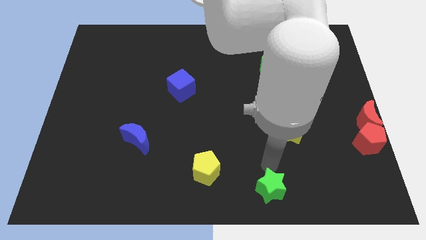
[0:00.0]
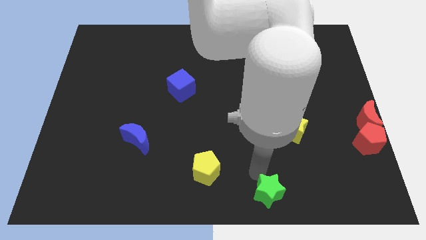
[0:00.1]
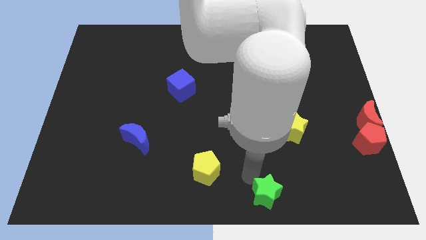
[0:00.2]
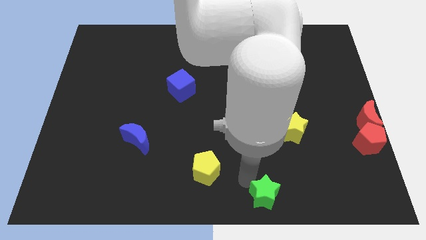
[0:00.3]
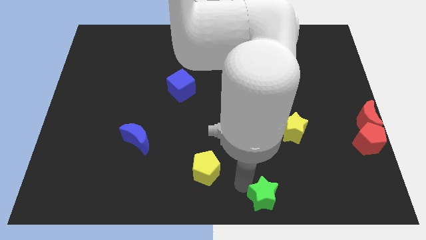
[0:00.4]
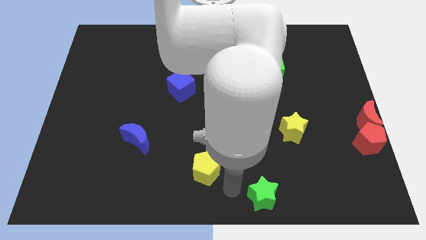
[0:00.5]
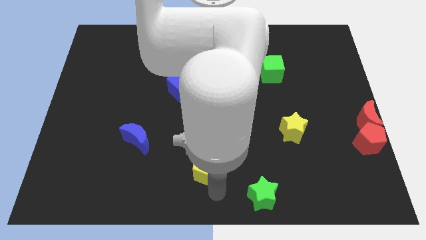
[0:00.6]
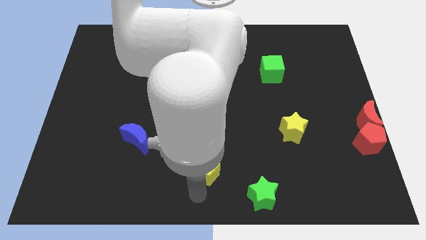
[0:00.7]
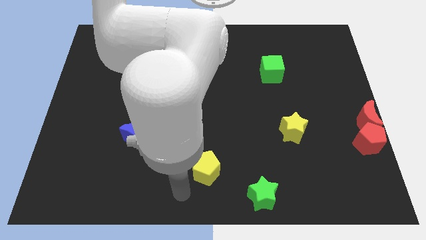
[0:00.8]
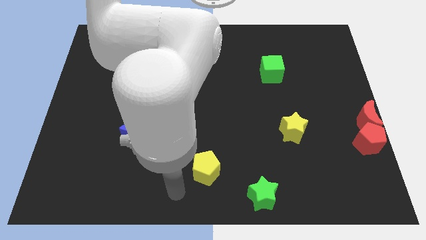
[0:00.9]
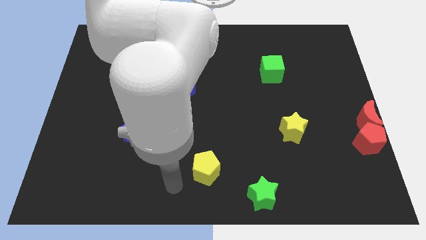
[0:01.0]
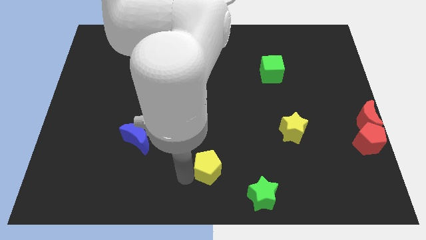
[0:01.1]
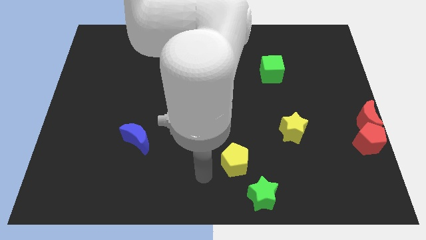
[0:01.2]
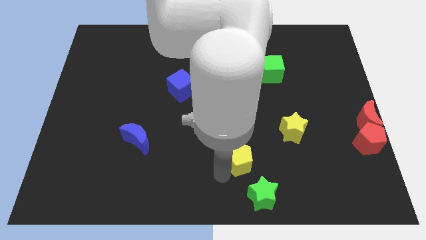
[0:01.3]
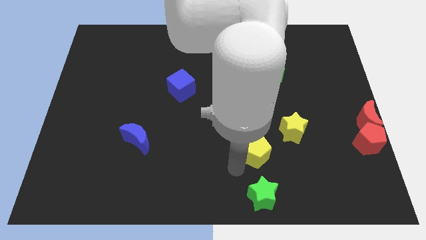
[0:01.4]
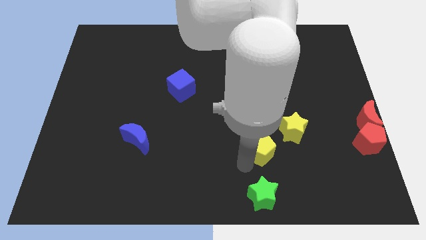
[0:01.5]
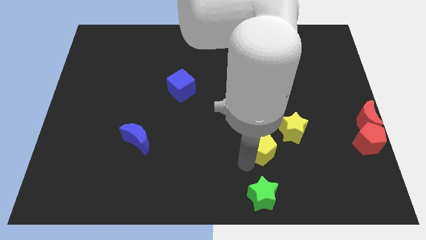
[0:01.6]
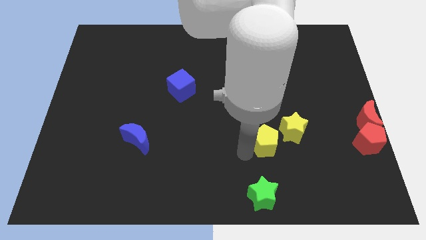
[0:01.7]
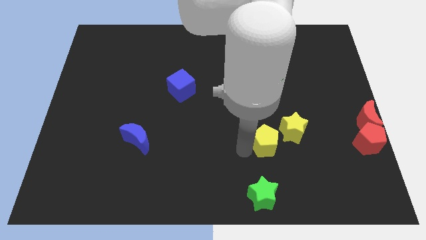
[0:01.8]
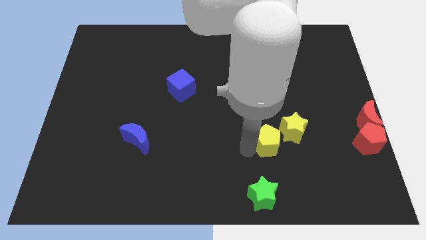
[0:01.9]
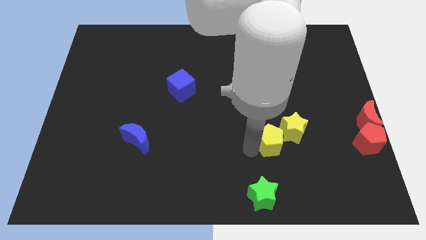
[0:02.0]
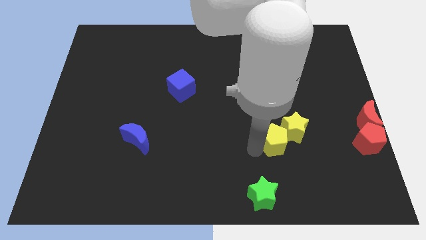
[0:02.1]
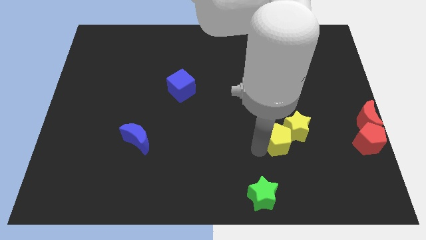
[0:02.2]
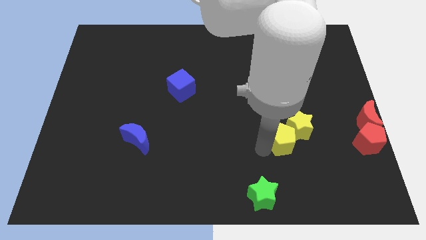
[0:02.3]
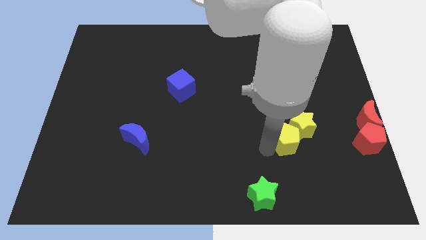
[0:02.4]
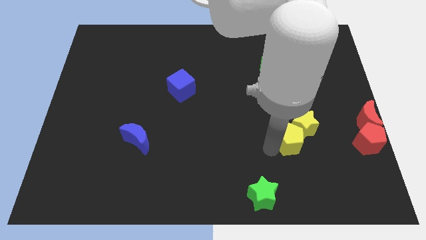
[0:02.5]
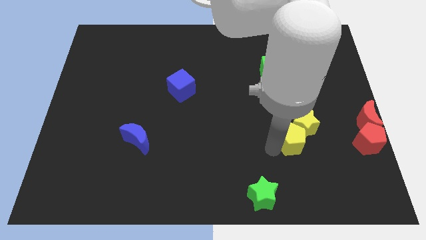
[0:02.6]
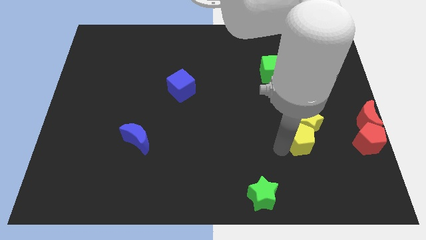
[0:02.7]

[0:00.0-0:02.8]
push the yellow pentagon into the yellow star

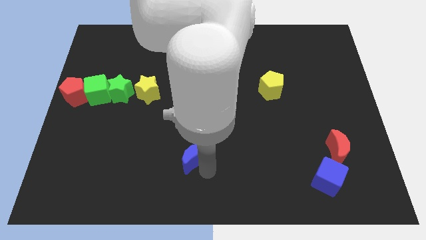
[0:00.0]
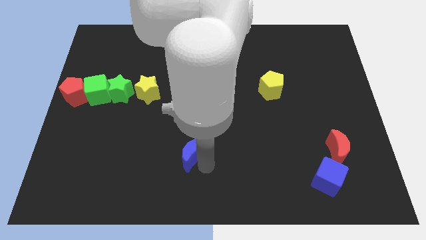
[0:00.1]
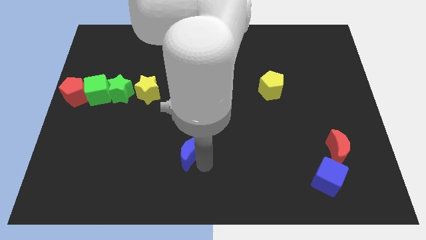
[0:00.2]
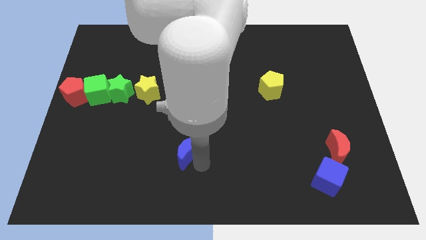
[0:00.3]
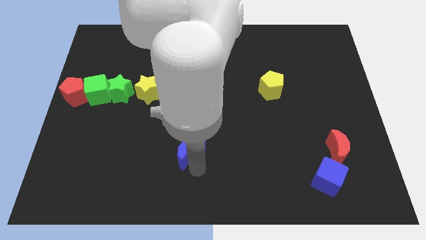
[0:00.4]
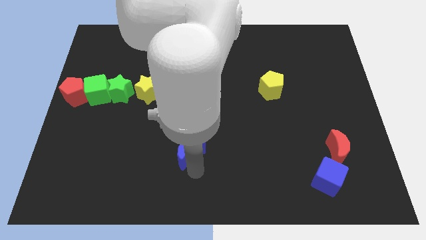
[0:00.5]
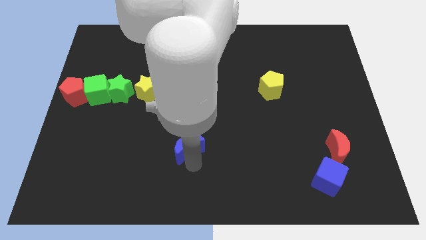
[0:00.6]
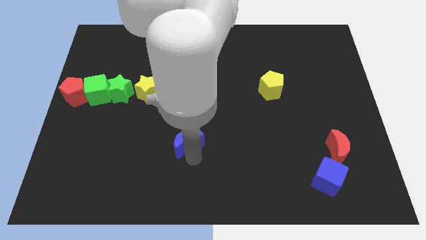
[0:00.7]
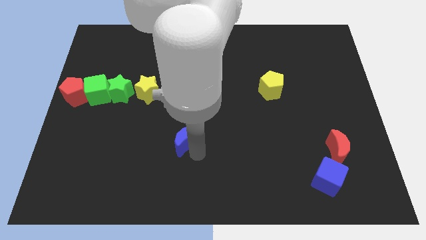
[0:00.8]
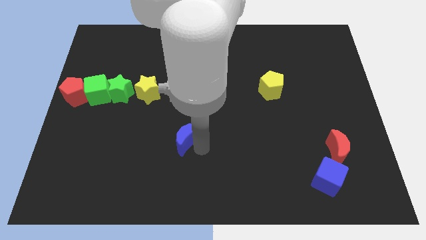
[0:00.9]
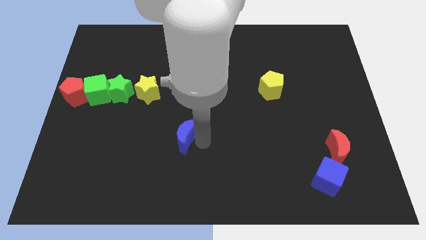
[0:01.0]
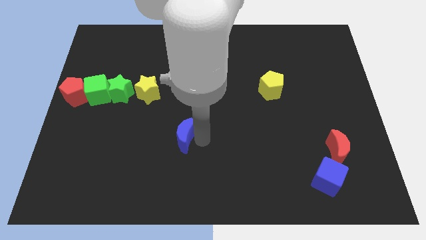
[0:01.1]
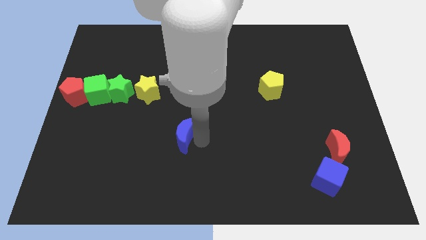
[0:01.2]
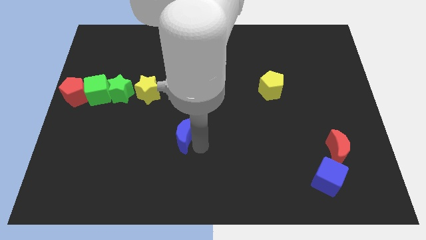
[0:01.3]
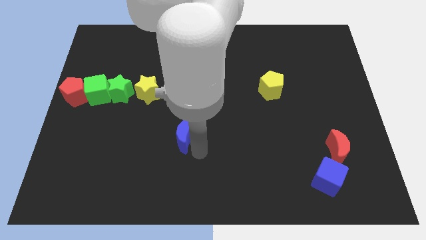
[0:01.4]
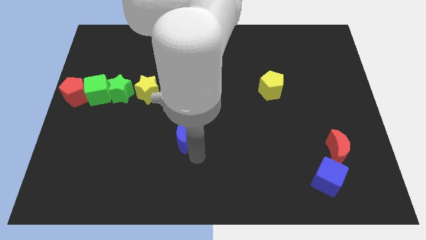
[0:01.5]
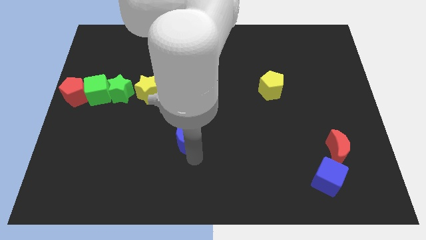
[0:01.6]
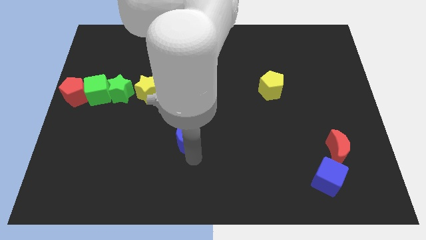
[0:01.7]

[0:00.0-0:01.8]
place the blue moon towards the center

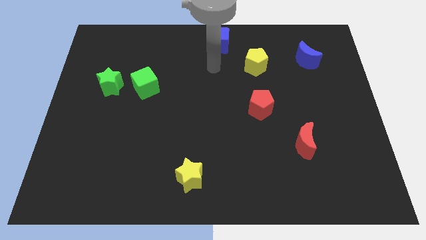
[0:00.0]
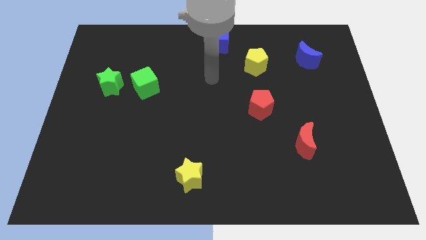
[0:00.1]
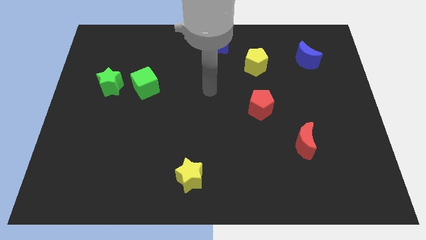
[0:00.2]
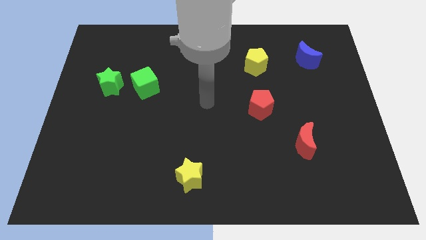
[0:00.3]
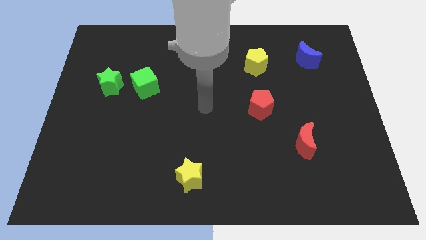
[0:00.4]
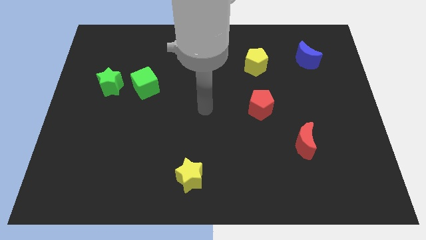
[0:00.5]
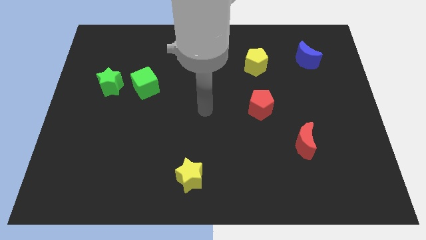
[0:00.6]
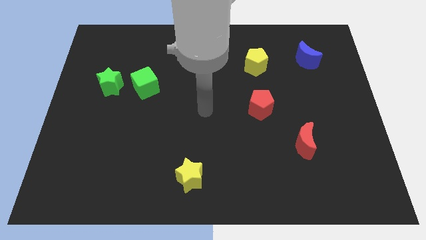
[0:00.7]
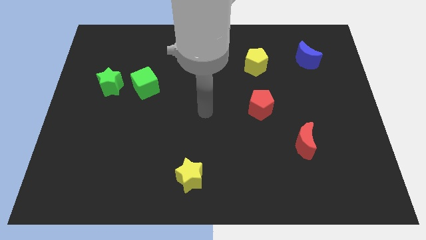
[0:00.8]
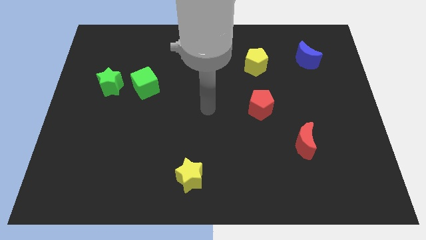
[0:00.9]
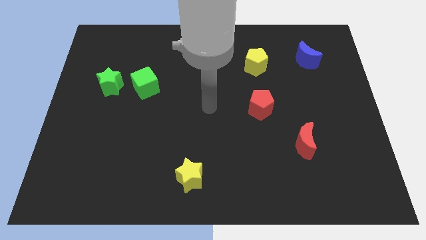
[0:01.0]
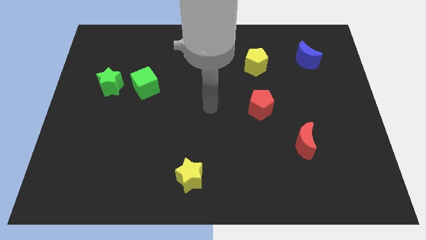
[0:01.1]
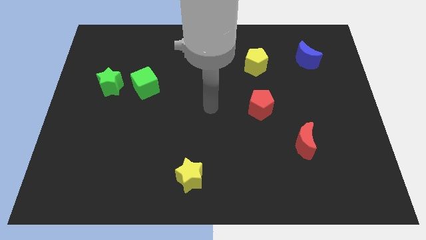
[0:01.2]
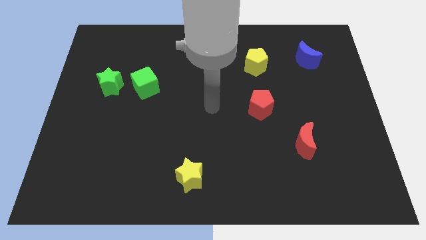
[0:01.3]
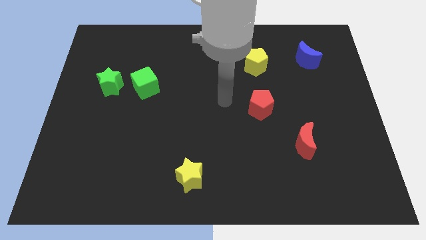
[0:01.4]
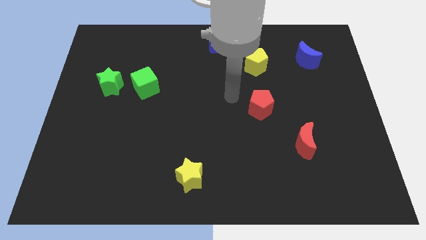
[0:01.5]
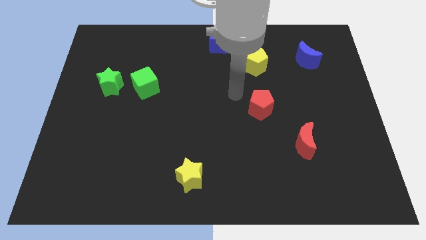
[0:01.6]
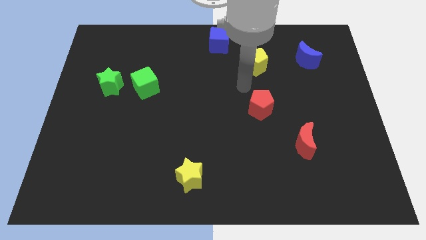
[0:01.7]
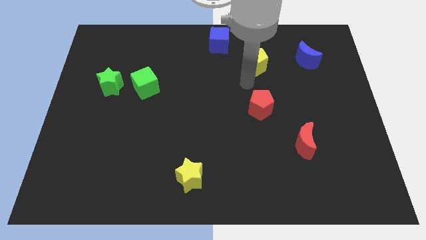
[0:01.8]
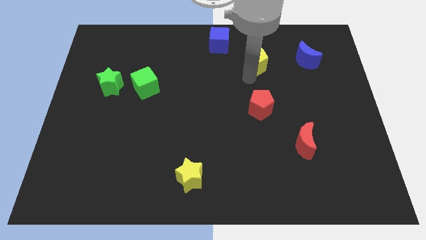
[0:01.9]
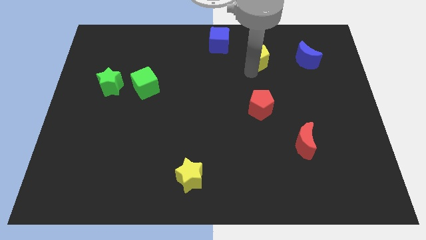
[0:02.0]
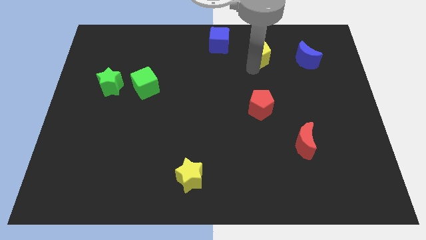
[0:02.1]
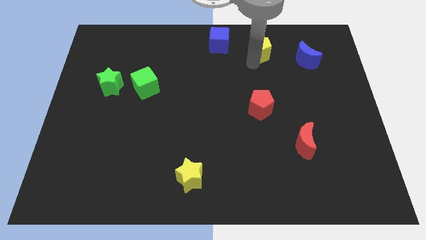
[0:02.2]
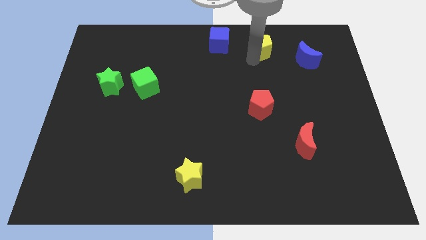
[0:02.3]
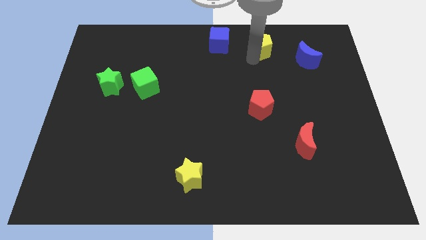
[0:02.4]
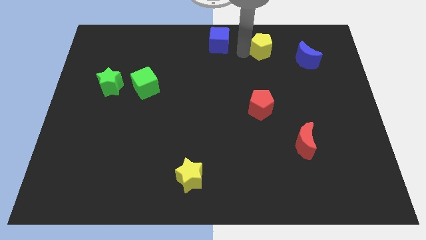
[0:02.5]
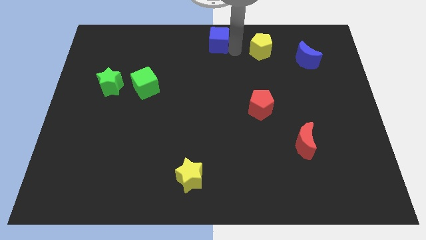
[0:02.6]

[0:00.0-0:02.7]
push the yellow pentagon to the right of the blue cube

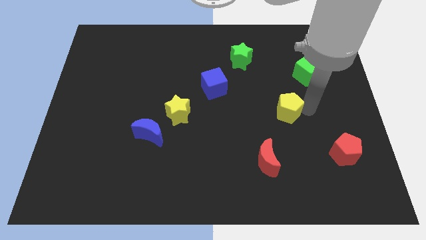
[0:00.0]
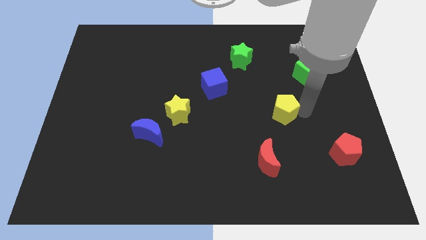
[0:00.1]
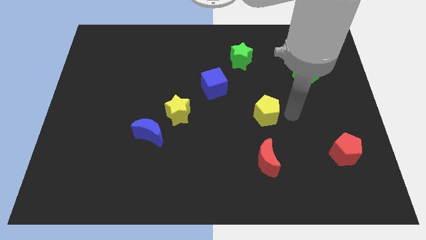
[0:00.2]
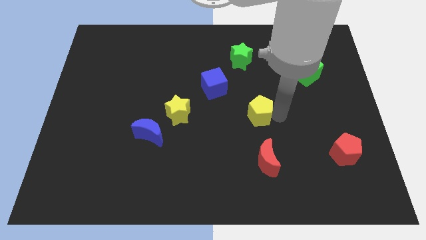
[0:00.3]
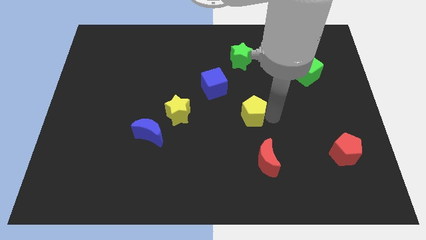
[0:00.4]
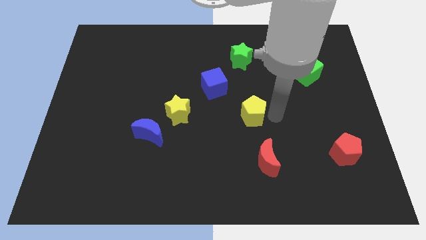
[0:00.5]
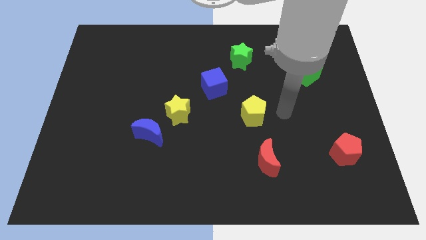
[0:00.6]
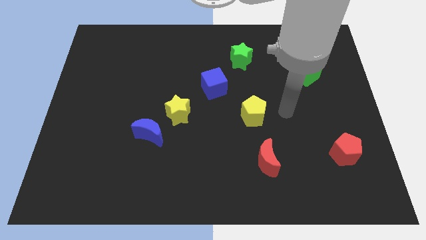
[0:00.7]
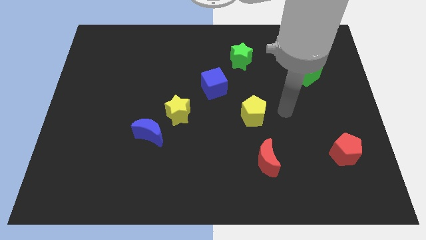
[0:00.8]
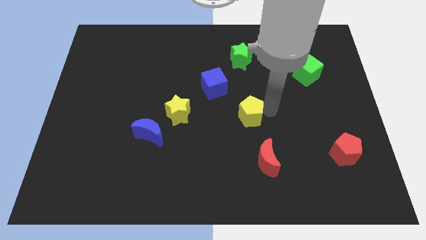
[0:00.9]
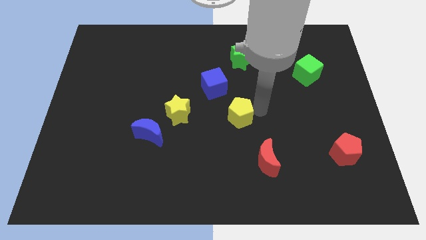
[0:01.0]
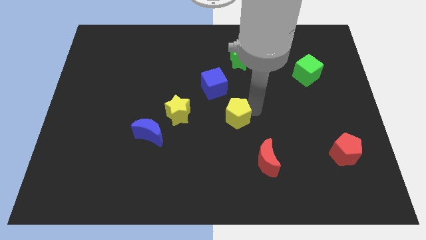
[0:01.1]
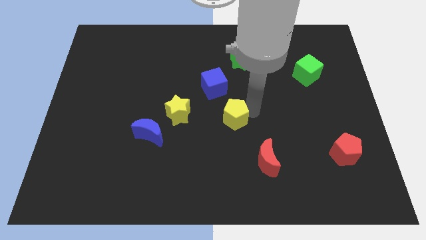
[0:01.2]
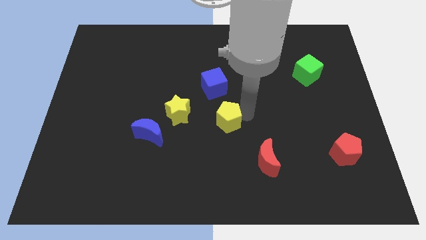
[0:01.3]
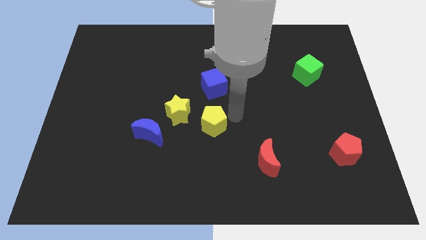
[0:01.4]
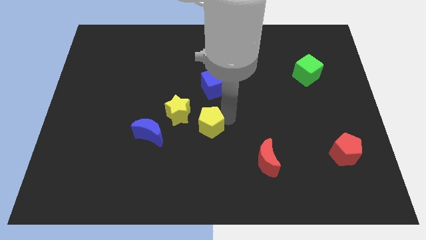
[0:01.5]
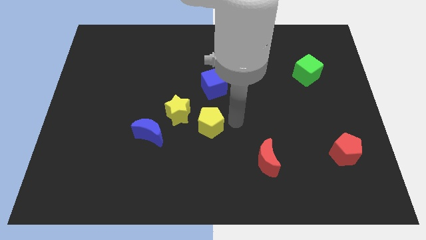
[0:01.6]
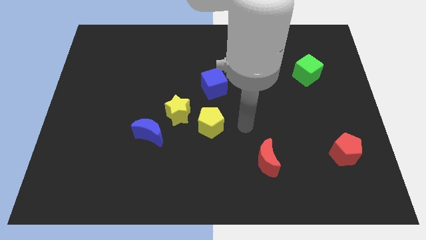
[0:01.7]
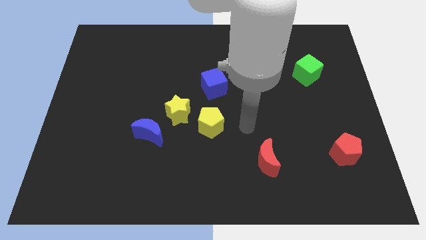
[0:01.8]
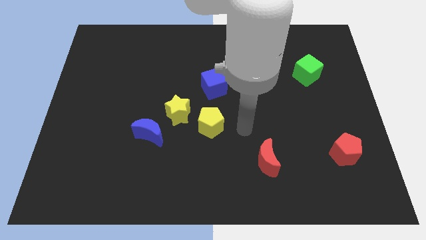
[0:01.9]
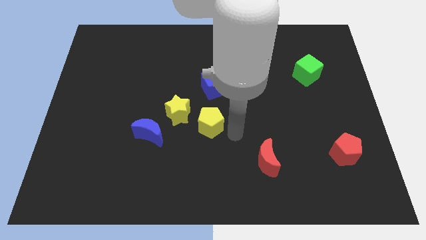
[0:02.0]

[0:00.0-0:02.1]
push yellow pentagon towards yellow star
